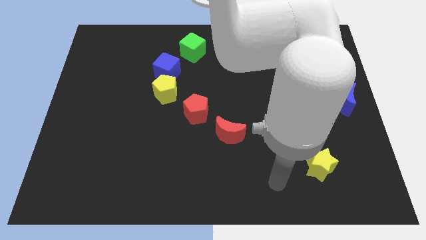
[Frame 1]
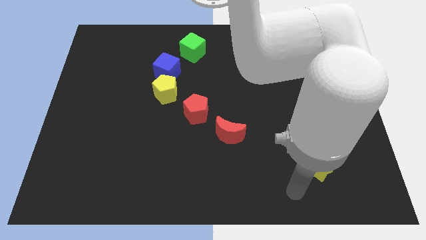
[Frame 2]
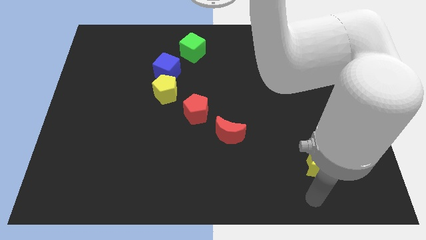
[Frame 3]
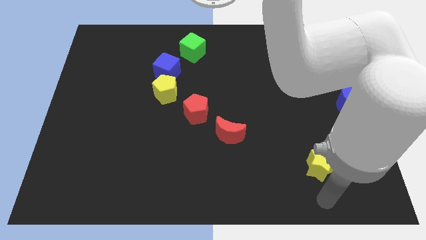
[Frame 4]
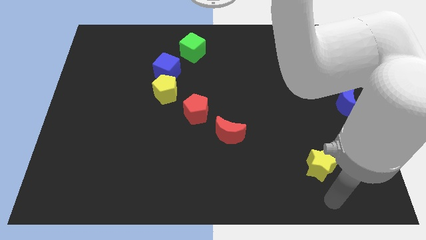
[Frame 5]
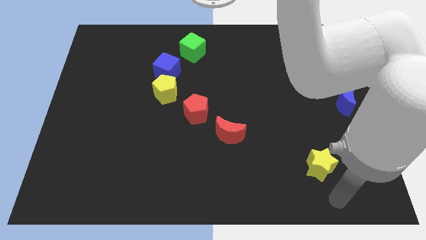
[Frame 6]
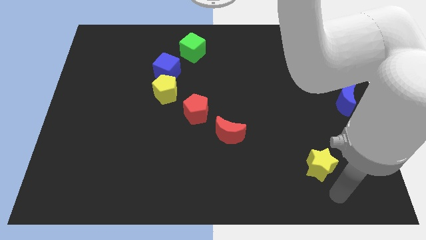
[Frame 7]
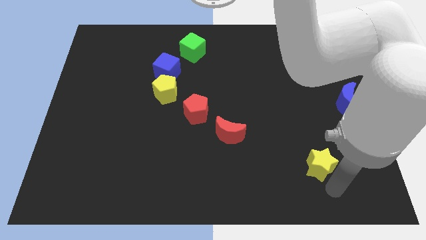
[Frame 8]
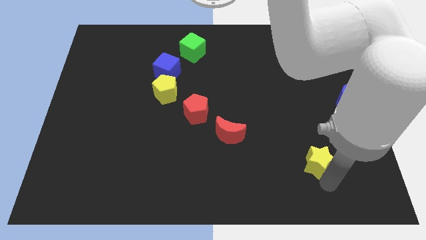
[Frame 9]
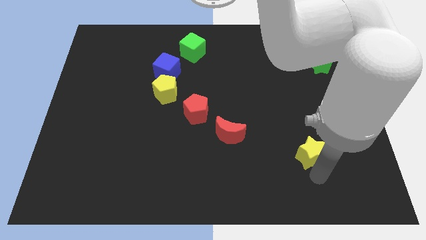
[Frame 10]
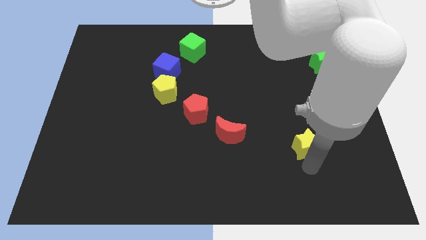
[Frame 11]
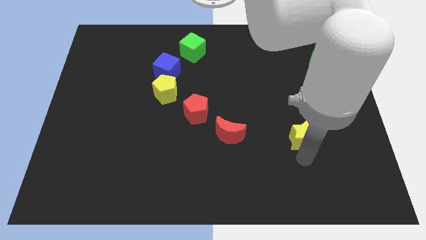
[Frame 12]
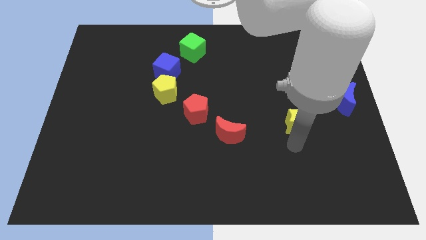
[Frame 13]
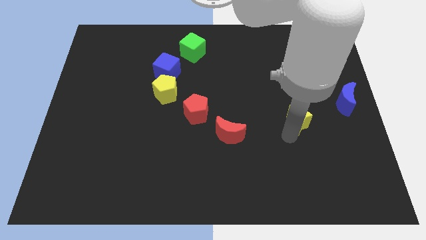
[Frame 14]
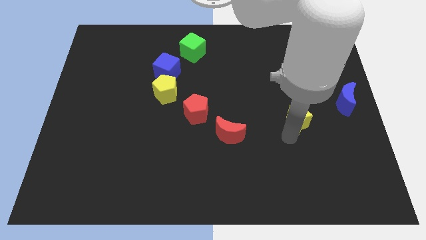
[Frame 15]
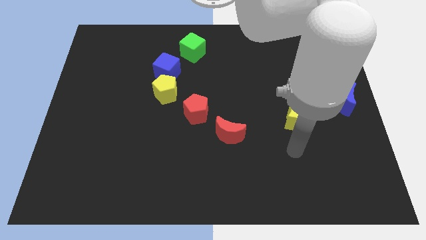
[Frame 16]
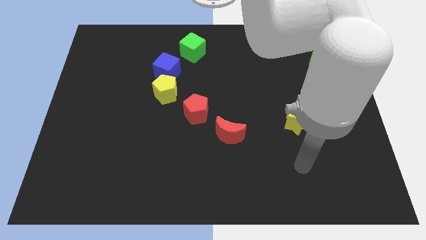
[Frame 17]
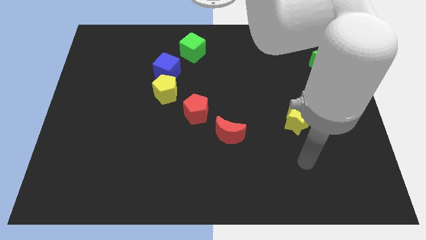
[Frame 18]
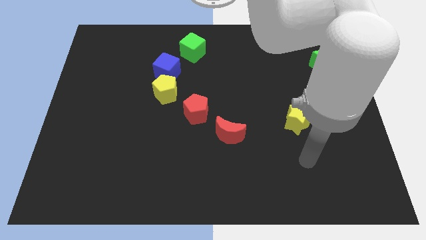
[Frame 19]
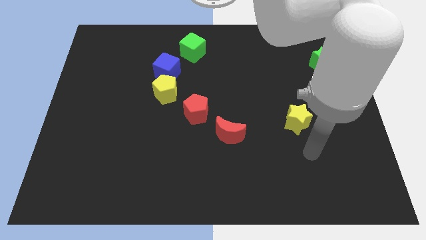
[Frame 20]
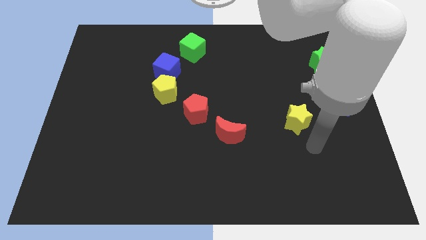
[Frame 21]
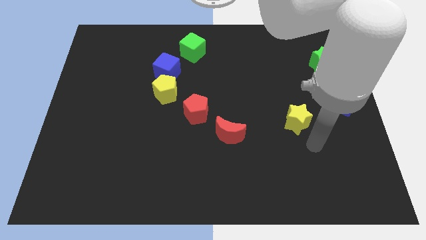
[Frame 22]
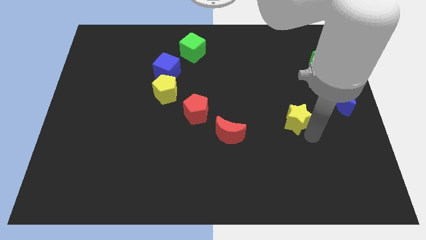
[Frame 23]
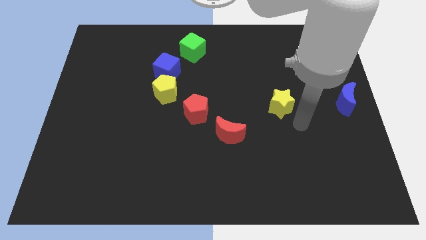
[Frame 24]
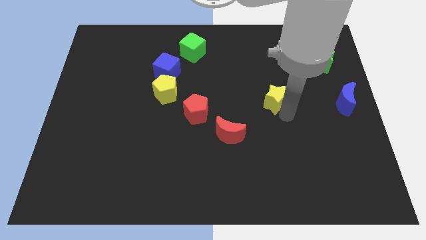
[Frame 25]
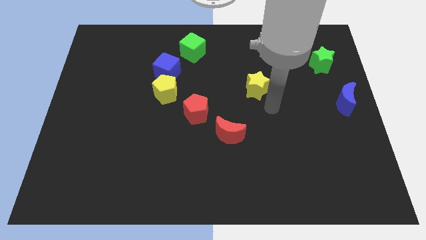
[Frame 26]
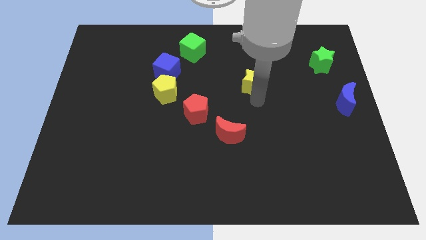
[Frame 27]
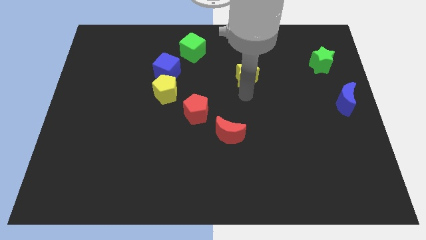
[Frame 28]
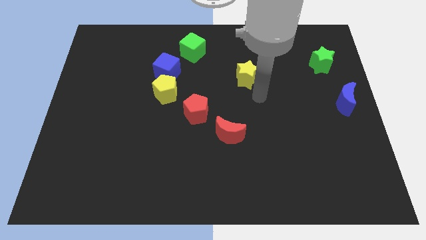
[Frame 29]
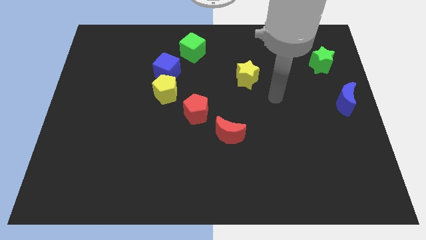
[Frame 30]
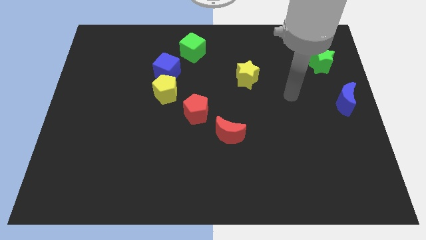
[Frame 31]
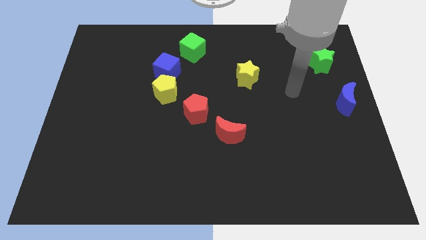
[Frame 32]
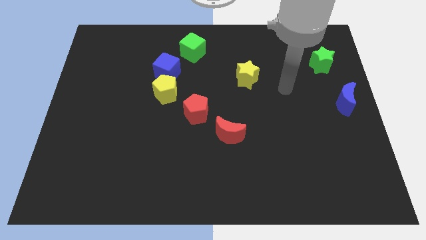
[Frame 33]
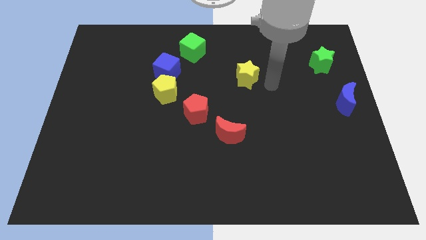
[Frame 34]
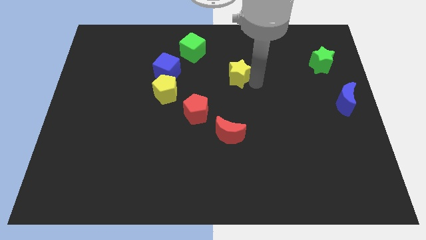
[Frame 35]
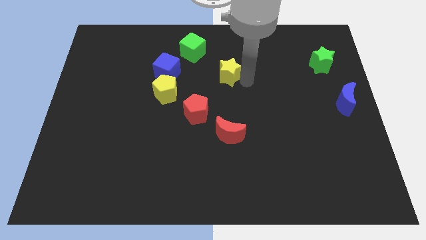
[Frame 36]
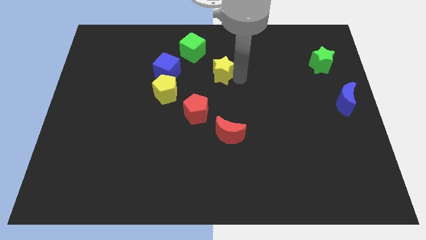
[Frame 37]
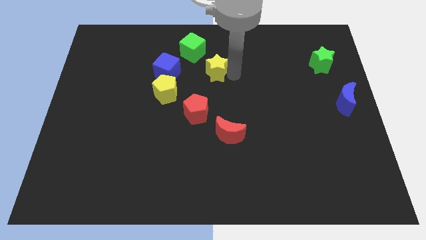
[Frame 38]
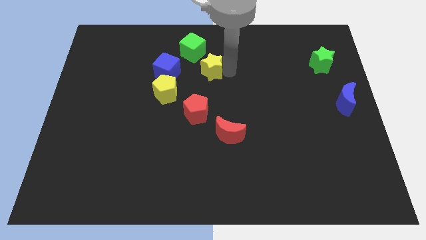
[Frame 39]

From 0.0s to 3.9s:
push the yellow star to the right of the blue cube

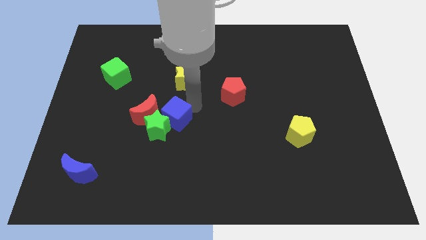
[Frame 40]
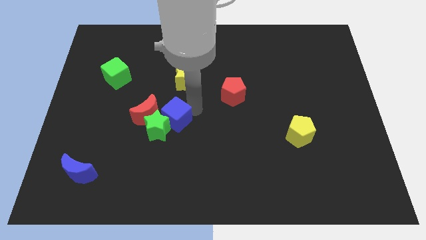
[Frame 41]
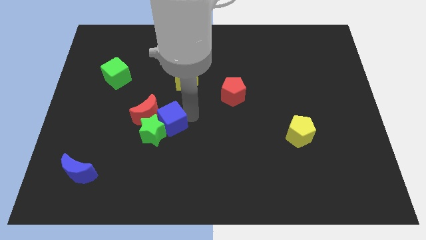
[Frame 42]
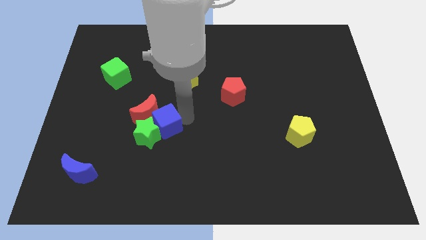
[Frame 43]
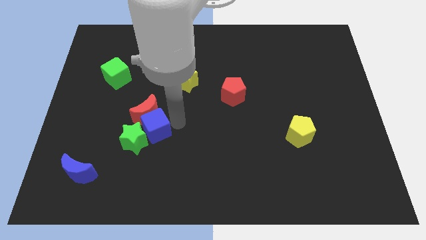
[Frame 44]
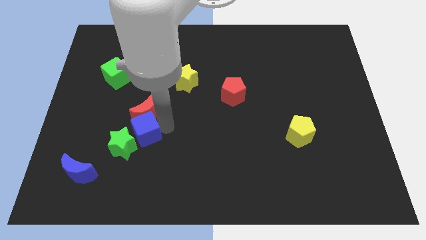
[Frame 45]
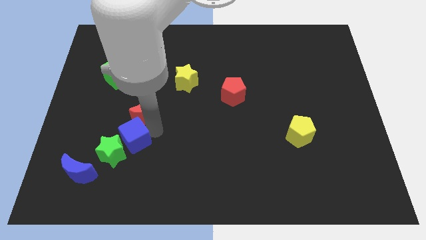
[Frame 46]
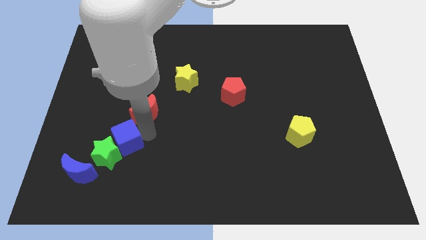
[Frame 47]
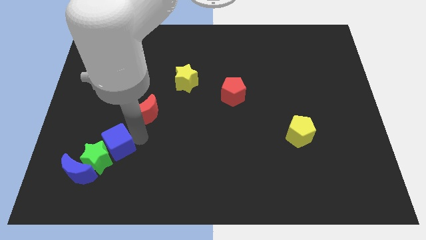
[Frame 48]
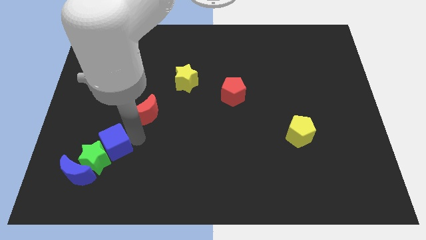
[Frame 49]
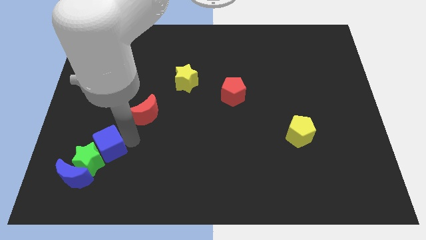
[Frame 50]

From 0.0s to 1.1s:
push blue cube along with green star into blue moon

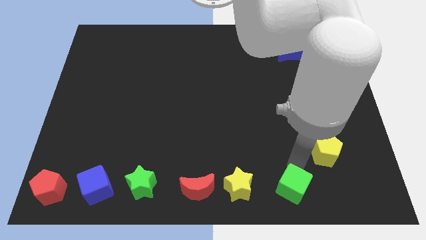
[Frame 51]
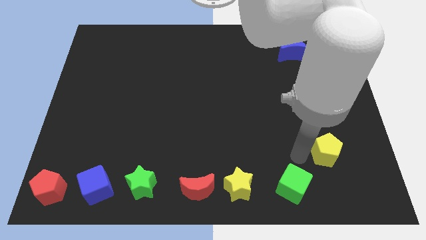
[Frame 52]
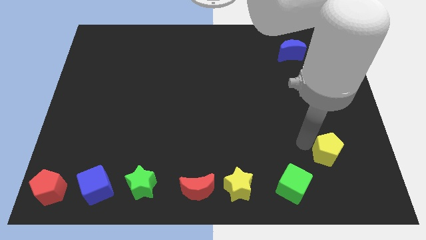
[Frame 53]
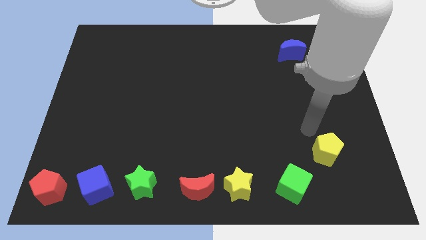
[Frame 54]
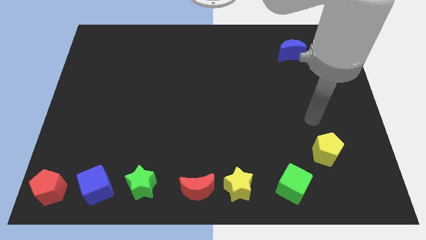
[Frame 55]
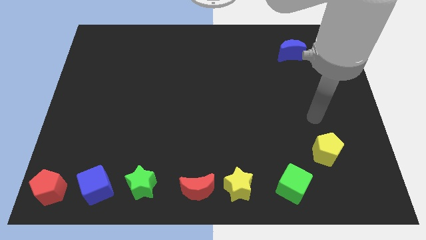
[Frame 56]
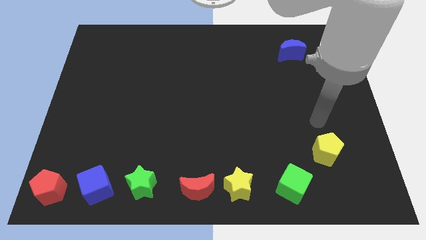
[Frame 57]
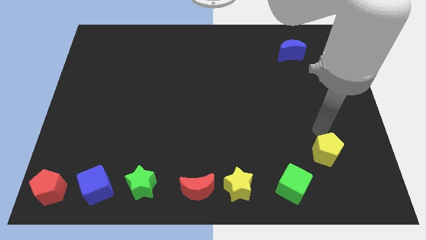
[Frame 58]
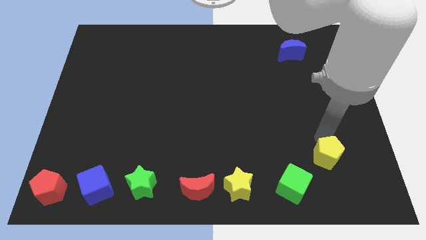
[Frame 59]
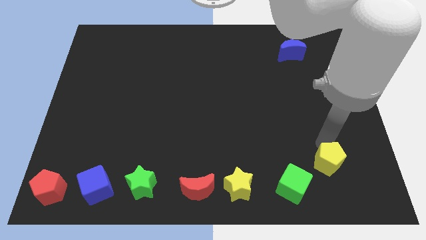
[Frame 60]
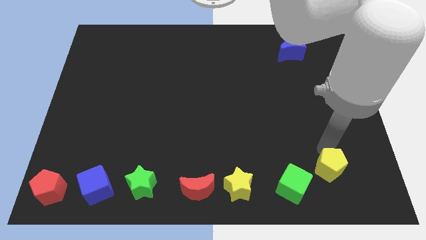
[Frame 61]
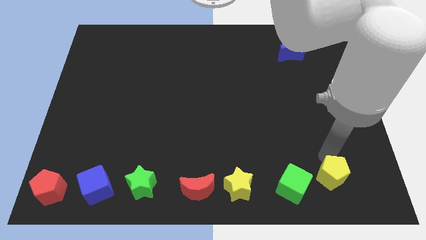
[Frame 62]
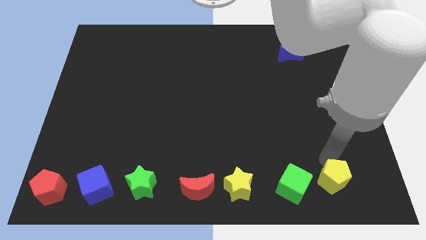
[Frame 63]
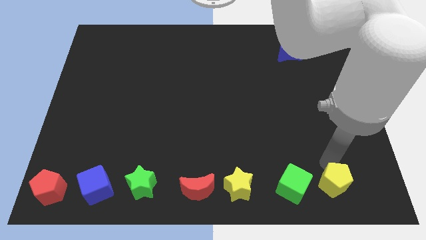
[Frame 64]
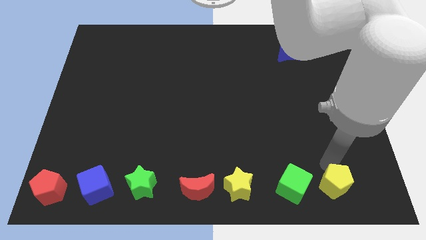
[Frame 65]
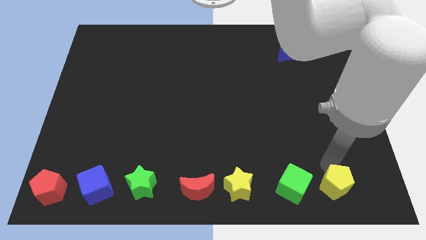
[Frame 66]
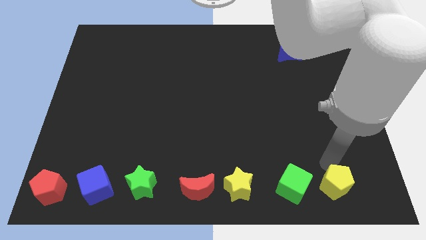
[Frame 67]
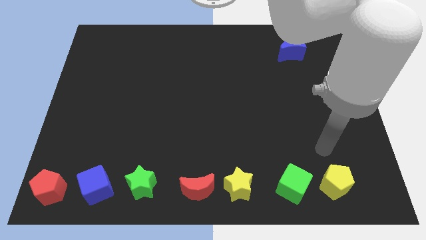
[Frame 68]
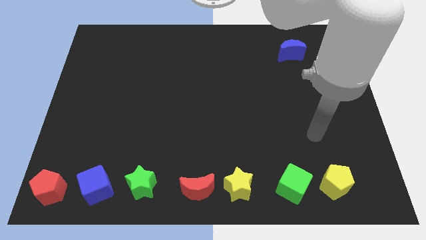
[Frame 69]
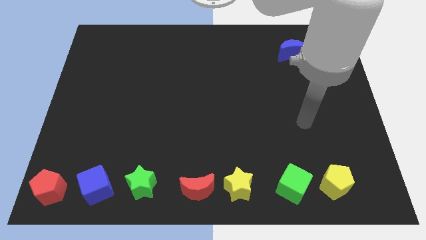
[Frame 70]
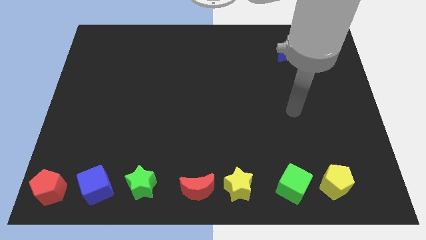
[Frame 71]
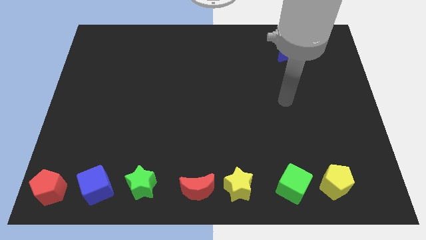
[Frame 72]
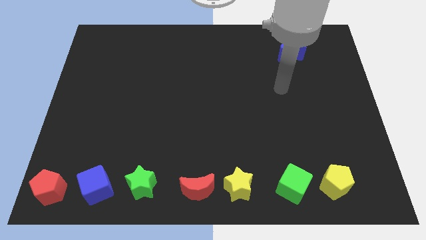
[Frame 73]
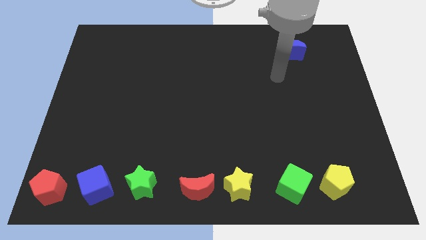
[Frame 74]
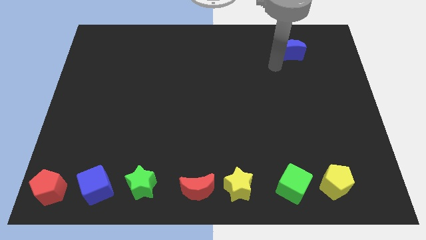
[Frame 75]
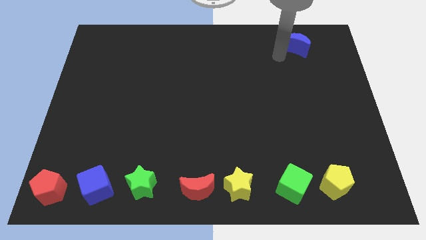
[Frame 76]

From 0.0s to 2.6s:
place the yellow pentagon to the right of green cube

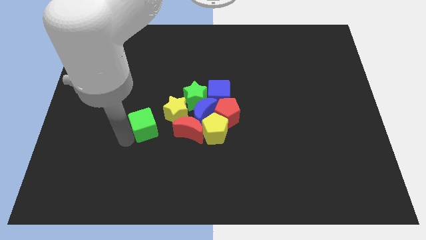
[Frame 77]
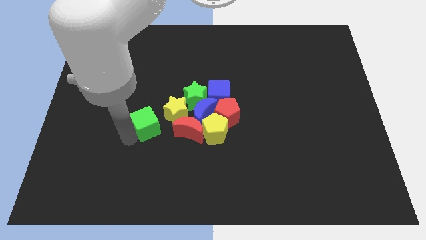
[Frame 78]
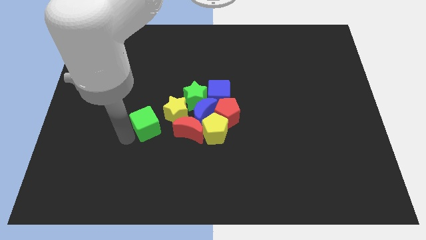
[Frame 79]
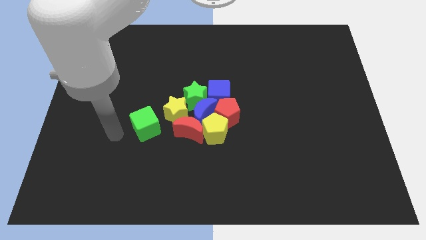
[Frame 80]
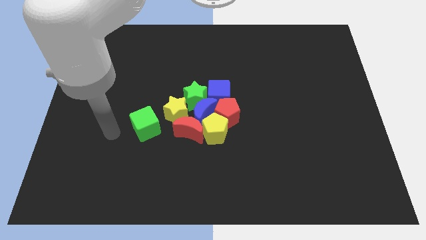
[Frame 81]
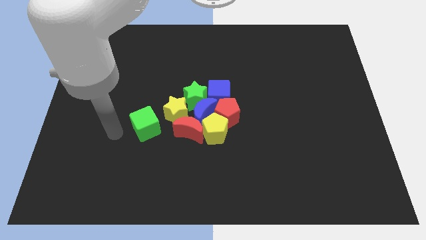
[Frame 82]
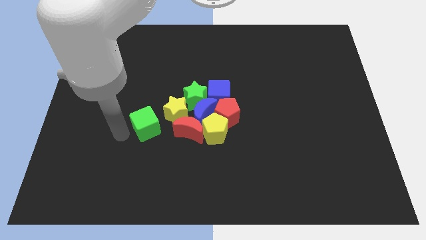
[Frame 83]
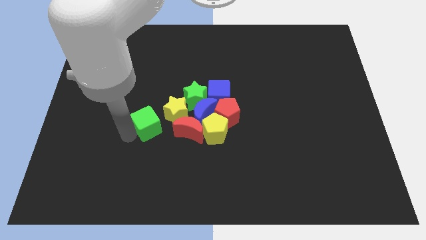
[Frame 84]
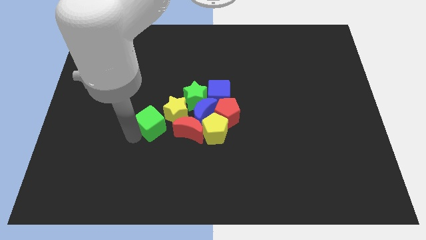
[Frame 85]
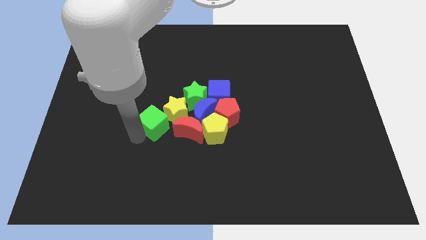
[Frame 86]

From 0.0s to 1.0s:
push the green cube towards the group of blocks

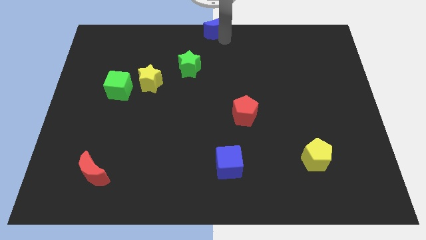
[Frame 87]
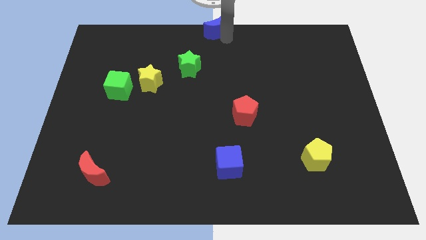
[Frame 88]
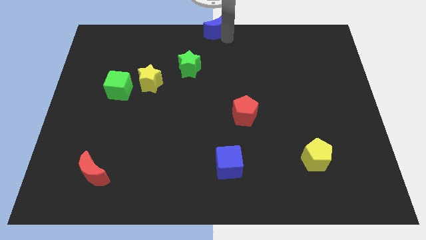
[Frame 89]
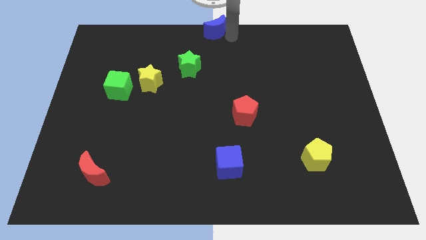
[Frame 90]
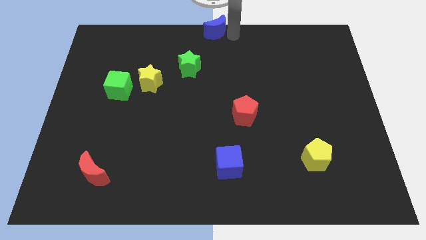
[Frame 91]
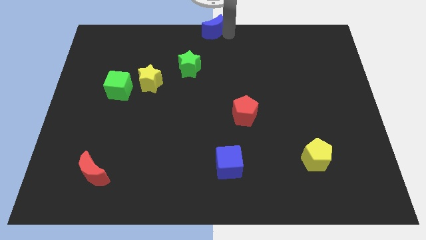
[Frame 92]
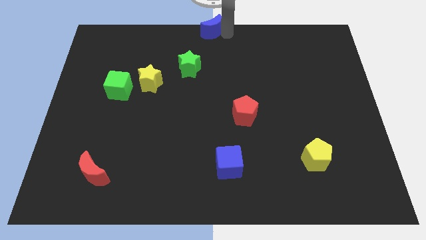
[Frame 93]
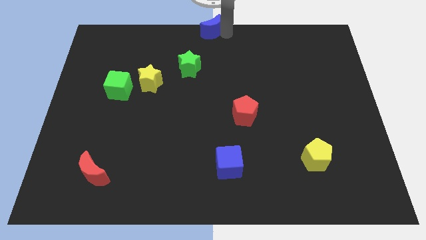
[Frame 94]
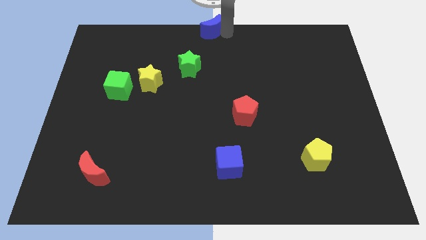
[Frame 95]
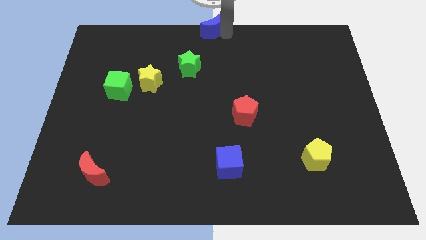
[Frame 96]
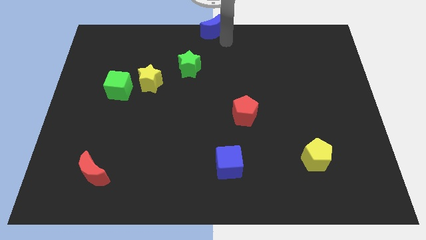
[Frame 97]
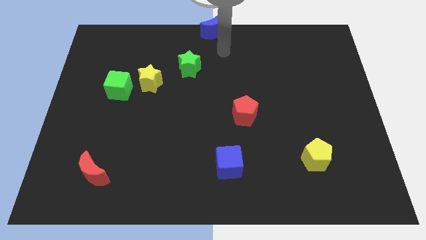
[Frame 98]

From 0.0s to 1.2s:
slightly push the blue crescent close to the top center
